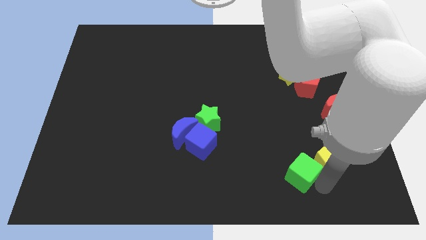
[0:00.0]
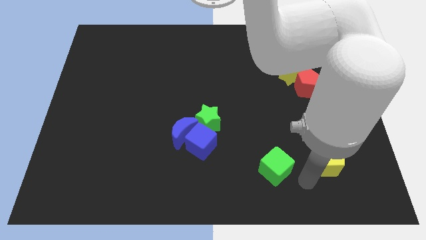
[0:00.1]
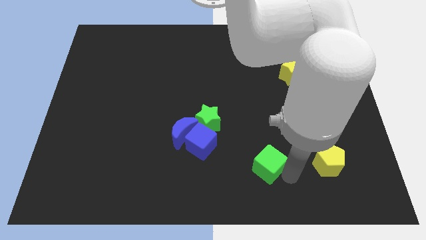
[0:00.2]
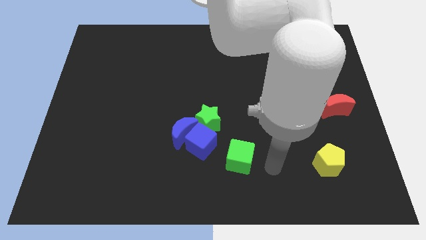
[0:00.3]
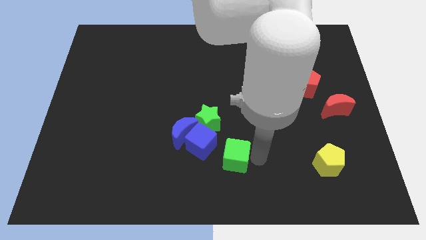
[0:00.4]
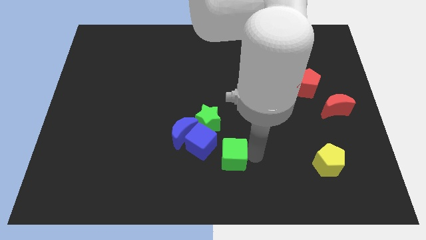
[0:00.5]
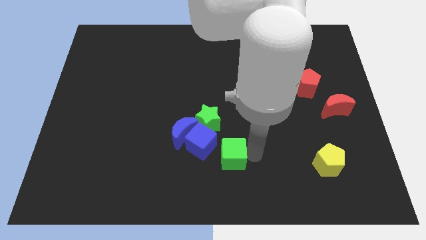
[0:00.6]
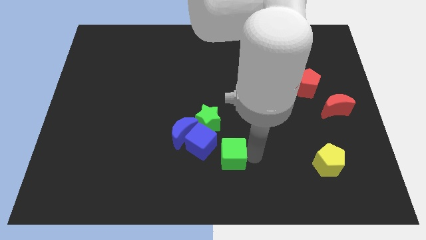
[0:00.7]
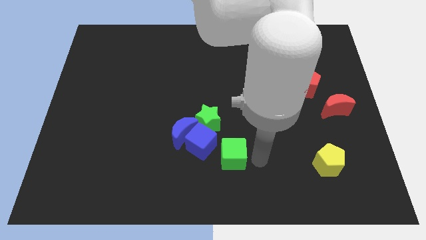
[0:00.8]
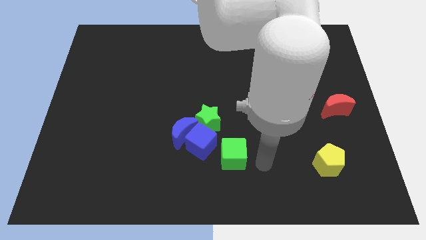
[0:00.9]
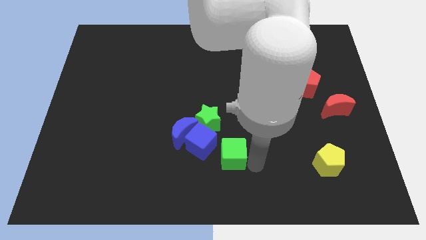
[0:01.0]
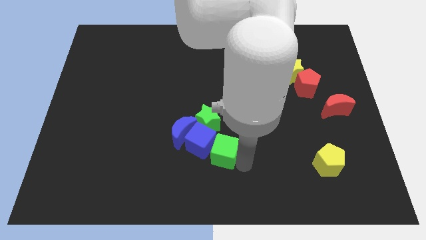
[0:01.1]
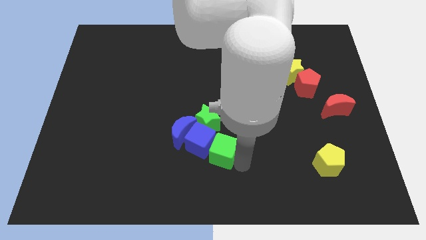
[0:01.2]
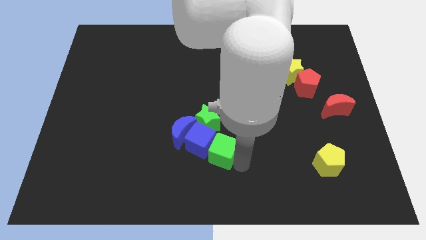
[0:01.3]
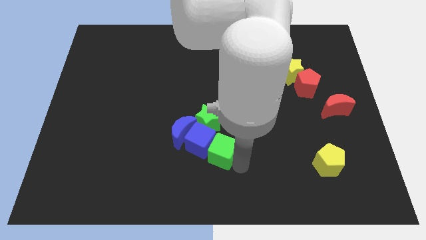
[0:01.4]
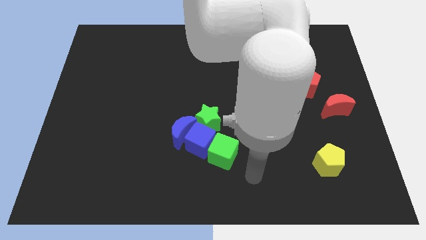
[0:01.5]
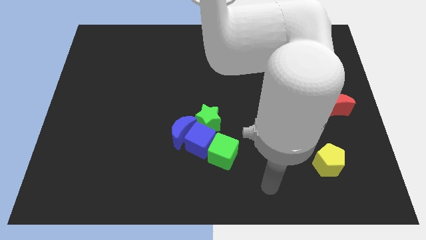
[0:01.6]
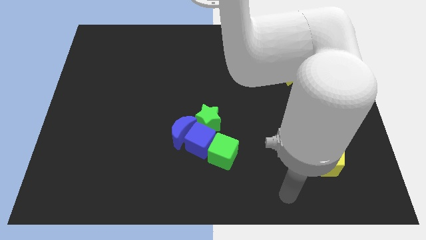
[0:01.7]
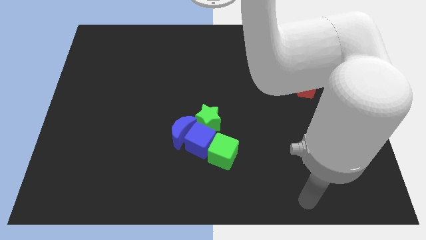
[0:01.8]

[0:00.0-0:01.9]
move the green cube into the blue cube

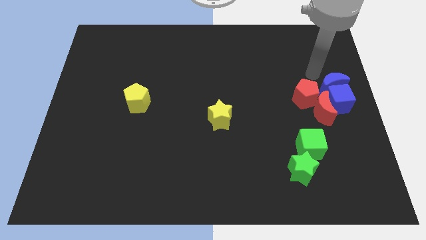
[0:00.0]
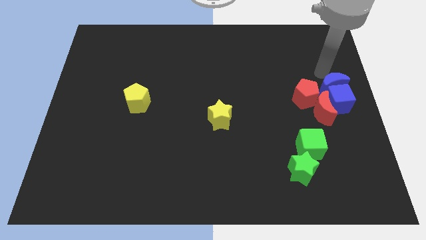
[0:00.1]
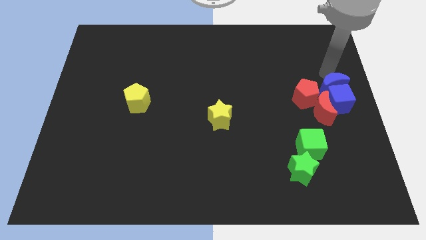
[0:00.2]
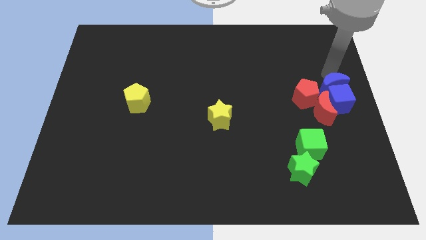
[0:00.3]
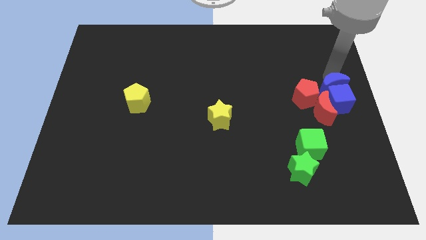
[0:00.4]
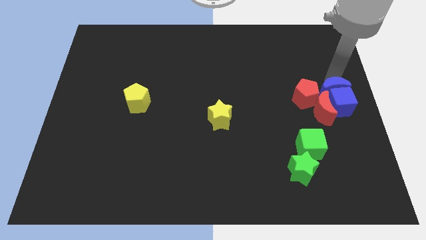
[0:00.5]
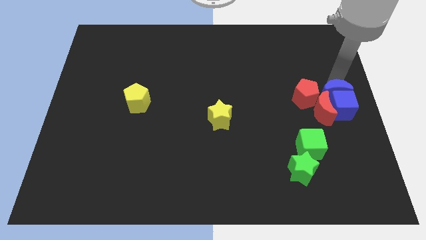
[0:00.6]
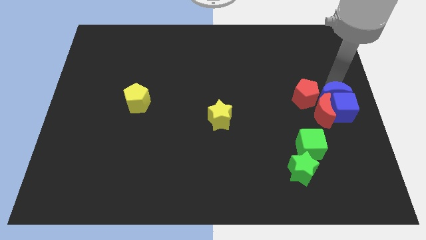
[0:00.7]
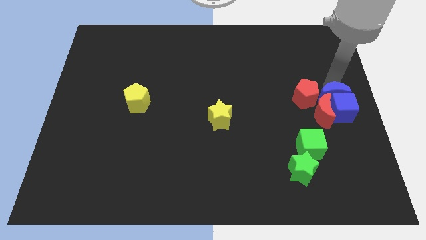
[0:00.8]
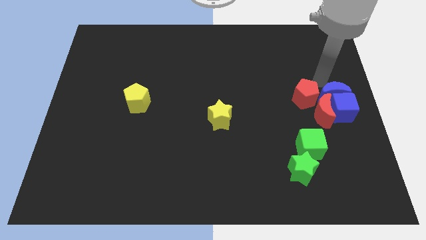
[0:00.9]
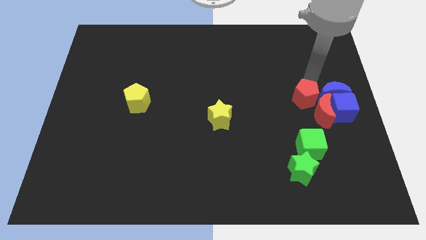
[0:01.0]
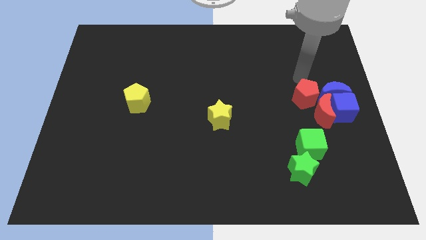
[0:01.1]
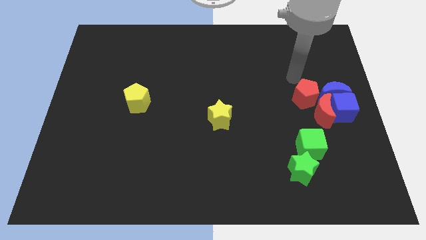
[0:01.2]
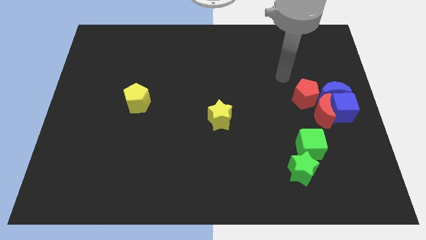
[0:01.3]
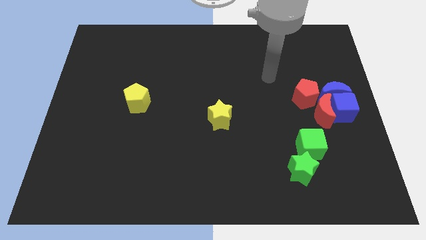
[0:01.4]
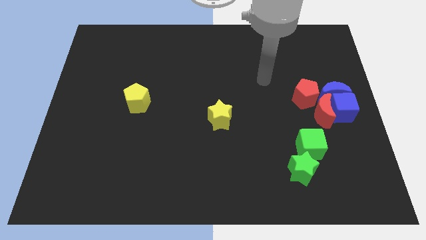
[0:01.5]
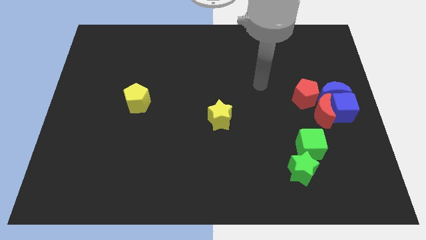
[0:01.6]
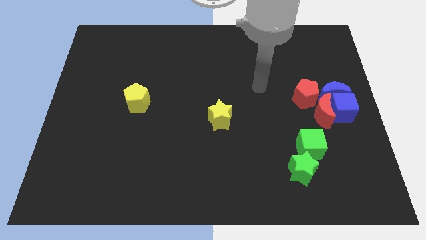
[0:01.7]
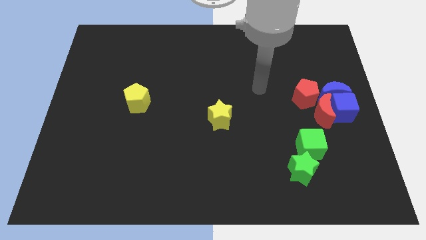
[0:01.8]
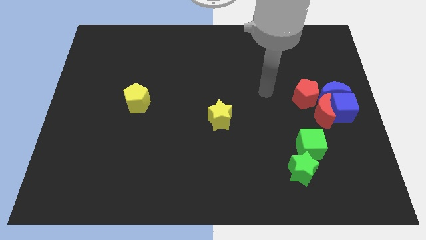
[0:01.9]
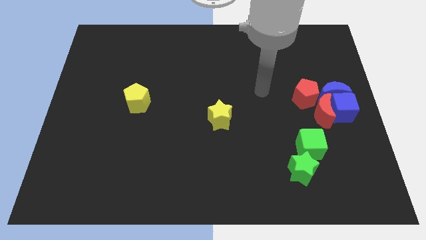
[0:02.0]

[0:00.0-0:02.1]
push the blue crescent into the blue cube

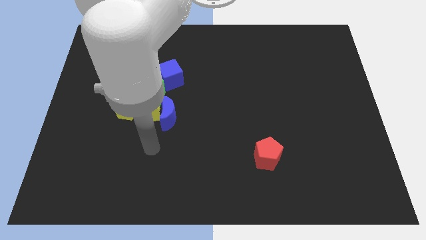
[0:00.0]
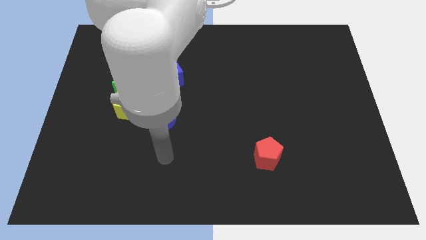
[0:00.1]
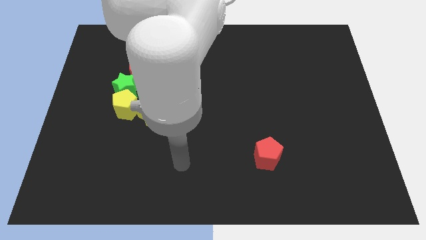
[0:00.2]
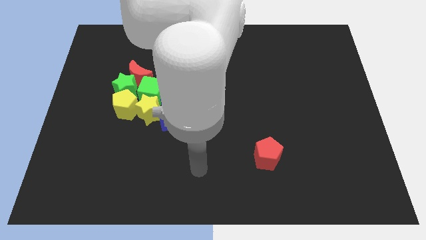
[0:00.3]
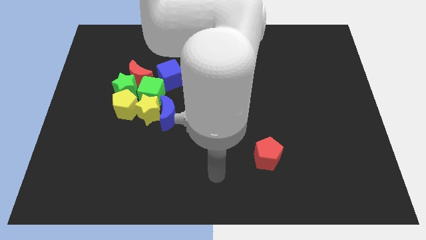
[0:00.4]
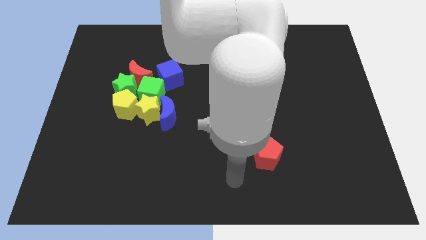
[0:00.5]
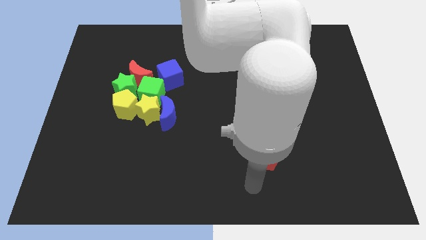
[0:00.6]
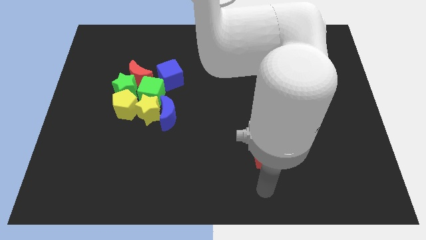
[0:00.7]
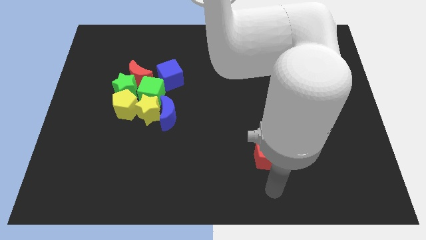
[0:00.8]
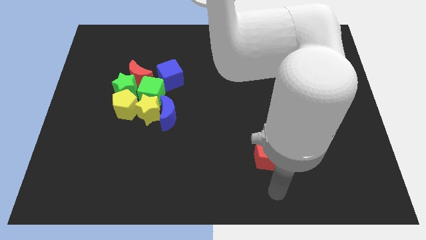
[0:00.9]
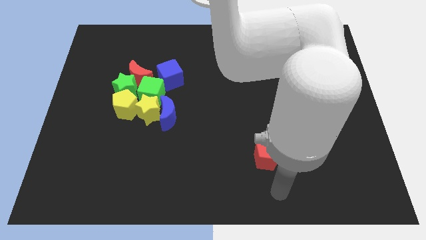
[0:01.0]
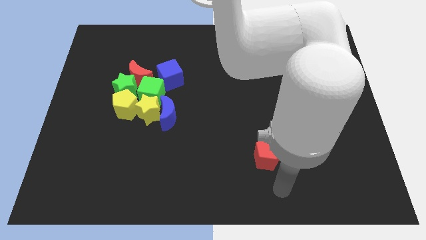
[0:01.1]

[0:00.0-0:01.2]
move your arm to the bottom of the red pentagon

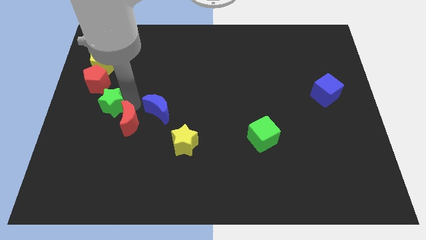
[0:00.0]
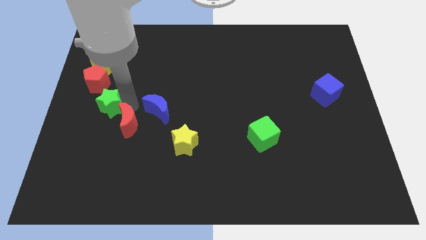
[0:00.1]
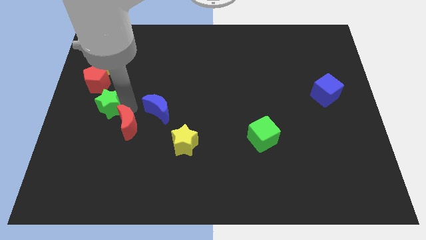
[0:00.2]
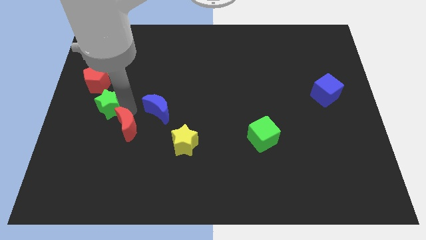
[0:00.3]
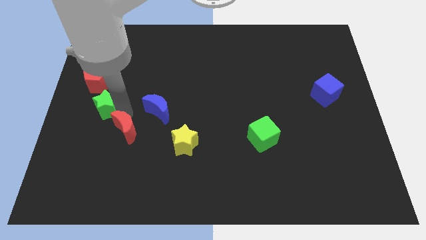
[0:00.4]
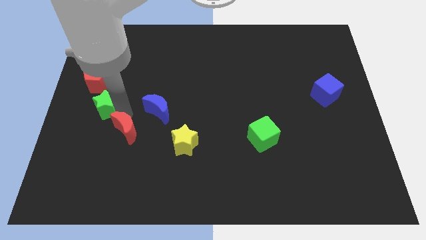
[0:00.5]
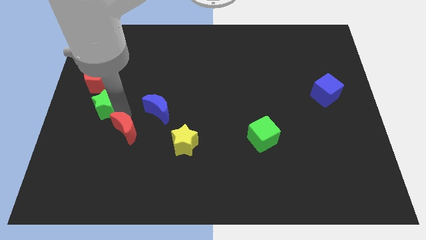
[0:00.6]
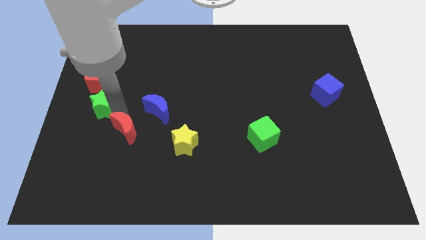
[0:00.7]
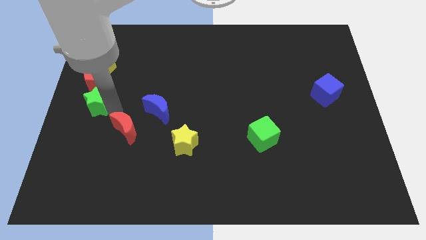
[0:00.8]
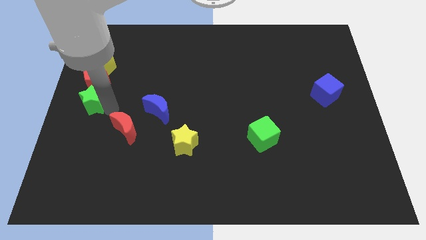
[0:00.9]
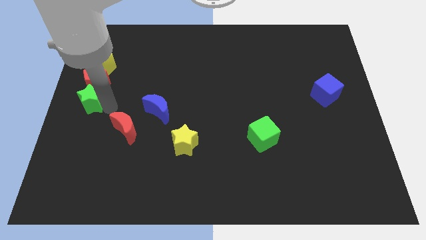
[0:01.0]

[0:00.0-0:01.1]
move the green star to the bottom of red pentgaon

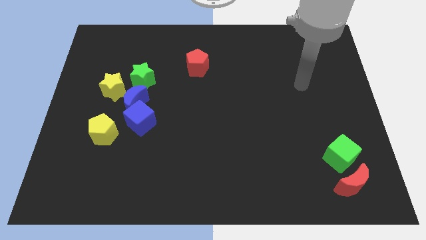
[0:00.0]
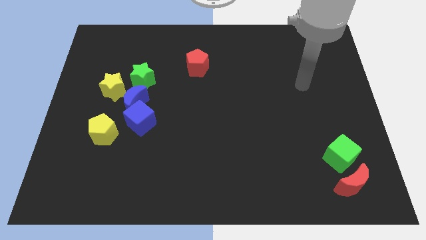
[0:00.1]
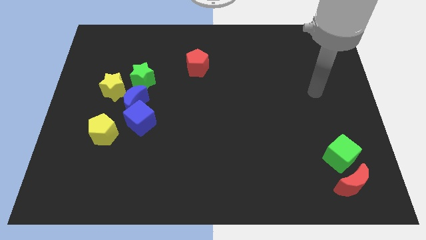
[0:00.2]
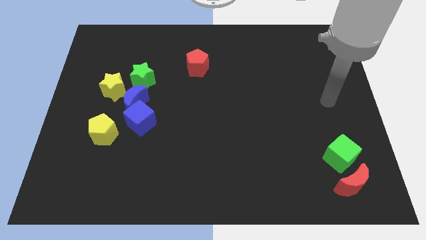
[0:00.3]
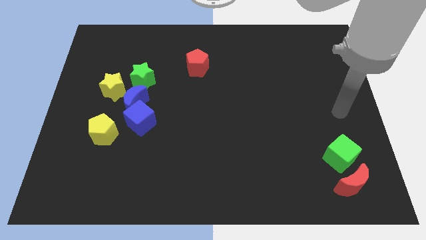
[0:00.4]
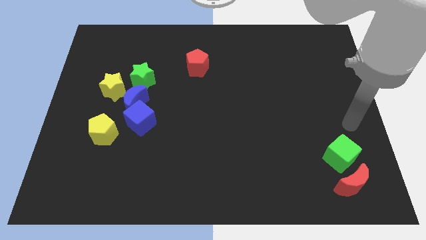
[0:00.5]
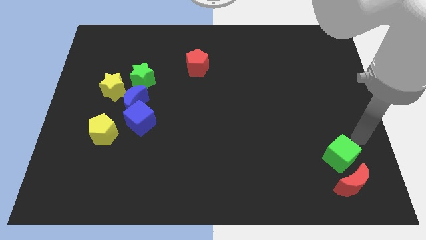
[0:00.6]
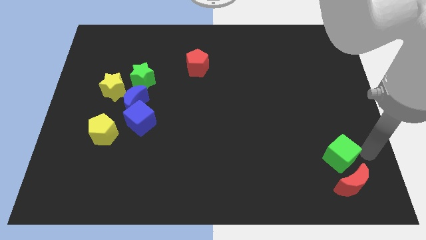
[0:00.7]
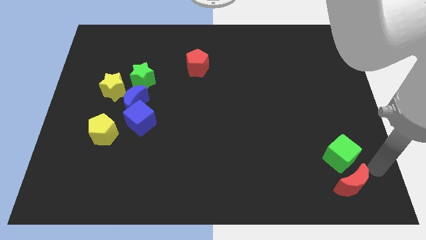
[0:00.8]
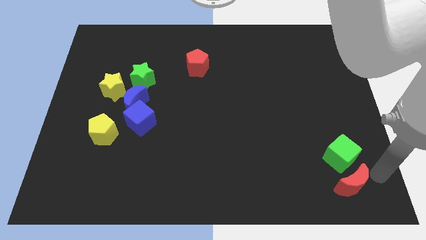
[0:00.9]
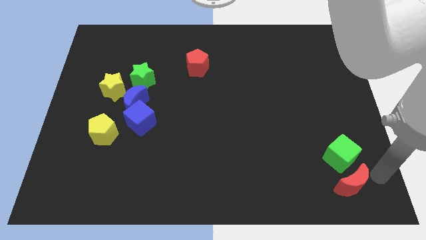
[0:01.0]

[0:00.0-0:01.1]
slide your arm to the right of red moon

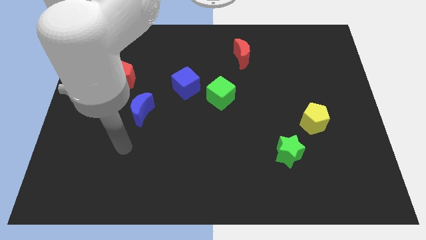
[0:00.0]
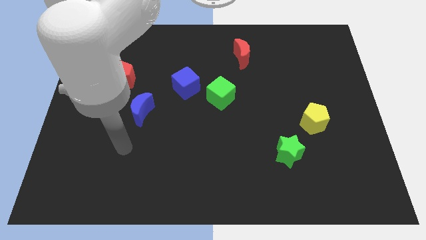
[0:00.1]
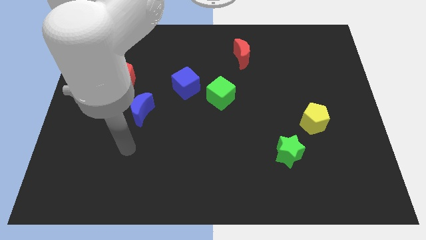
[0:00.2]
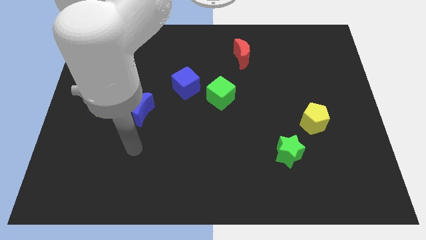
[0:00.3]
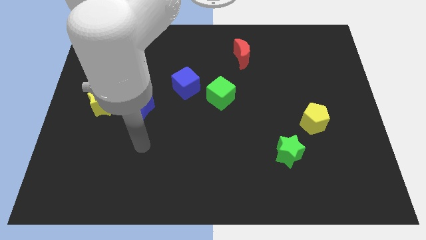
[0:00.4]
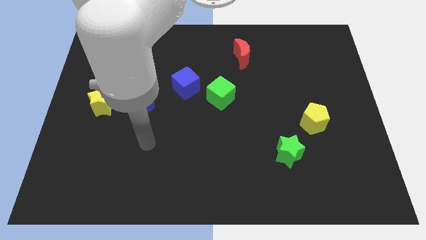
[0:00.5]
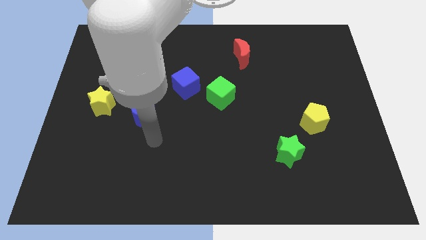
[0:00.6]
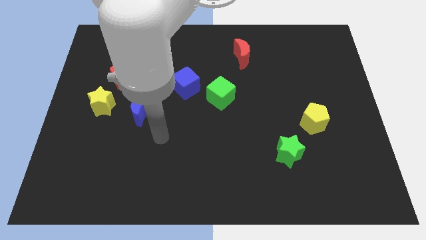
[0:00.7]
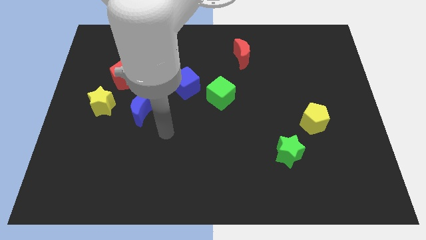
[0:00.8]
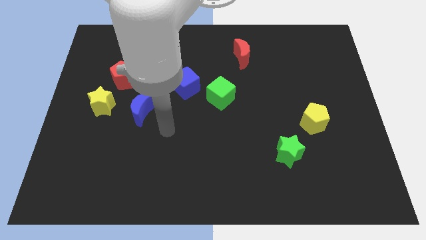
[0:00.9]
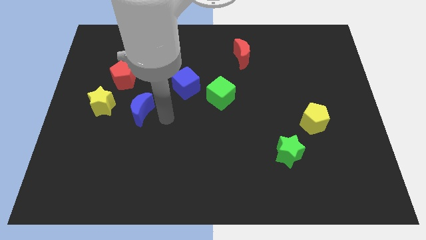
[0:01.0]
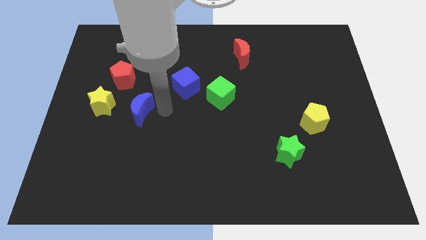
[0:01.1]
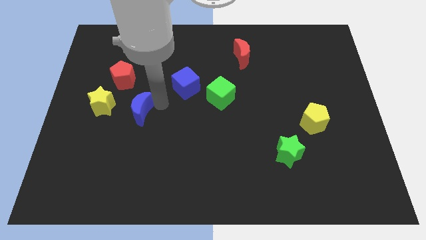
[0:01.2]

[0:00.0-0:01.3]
move the arm towards the blue crescent

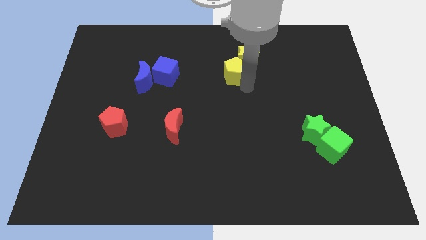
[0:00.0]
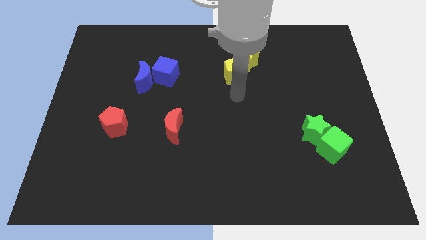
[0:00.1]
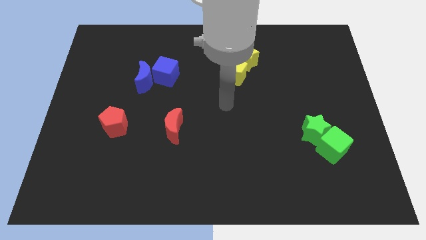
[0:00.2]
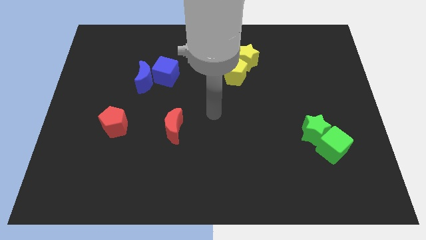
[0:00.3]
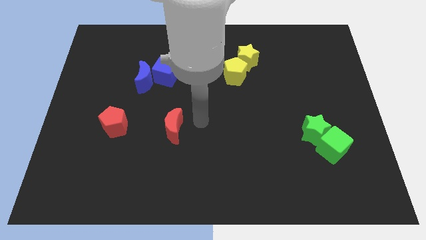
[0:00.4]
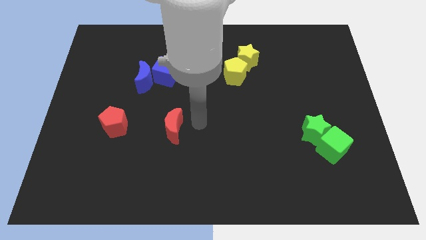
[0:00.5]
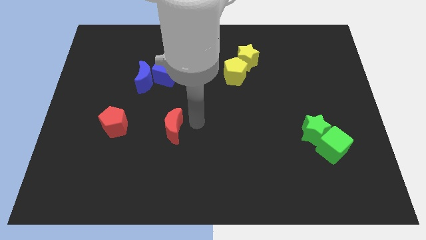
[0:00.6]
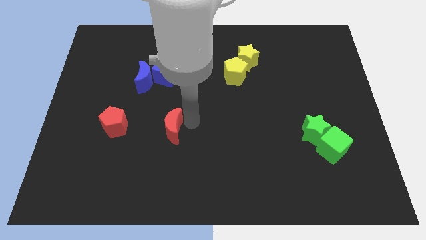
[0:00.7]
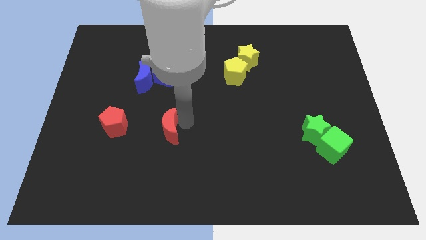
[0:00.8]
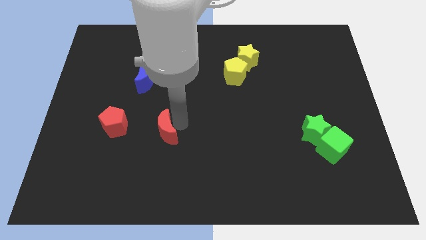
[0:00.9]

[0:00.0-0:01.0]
tap the top right side of the red crescent
